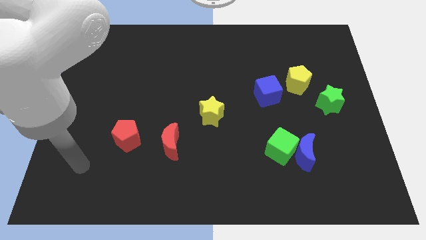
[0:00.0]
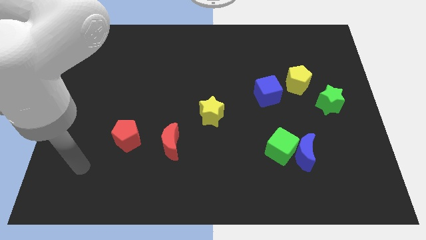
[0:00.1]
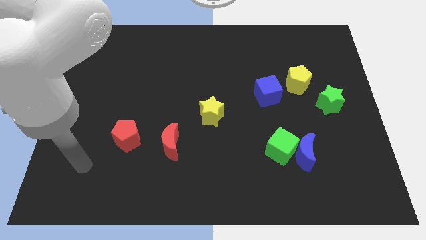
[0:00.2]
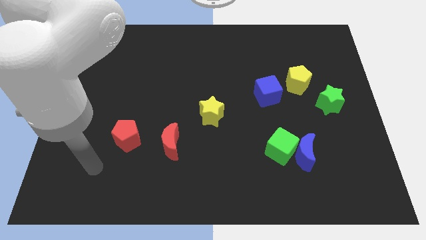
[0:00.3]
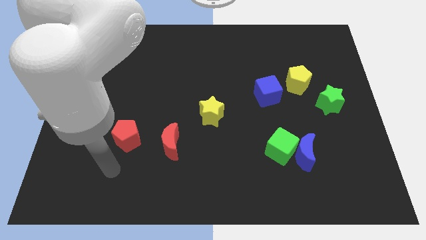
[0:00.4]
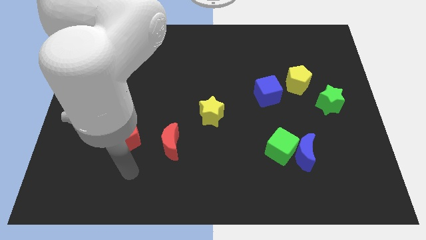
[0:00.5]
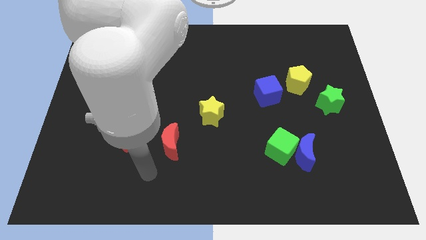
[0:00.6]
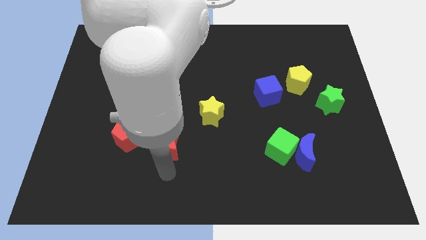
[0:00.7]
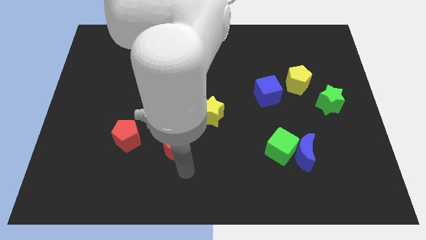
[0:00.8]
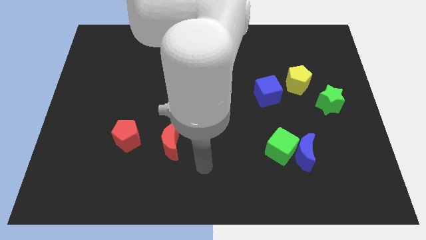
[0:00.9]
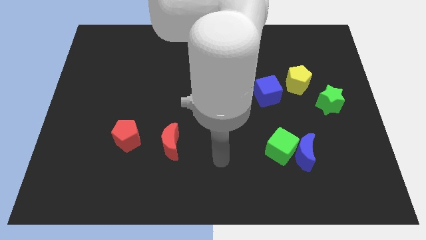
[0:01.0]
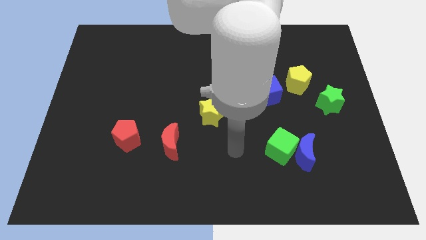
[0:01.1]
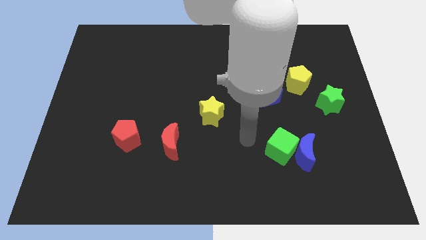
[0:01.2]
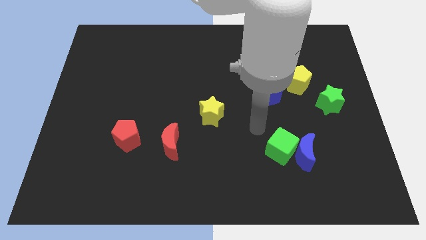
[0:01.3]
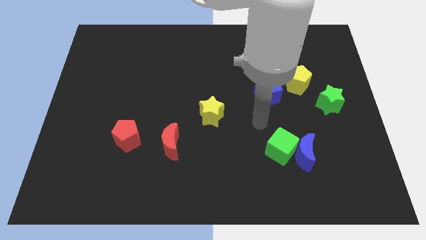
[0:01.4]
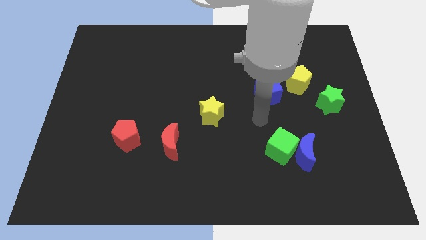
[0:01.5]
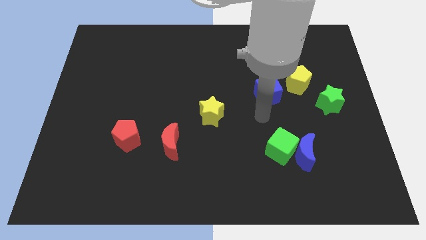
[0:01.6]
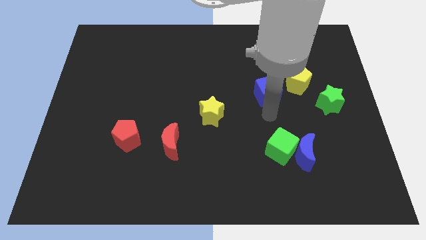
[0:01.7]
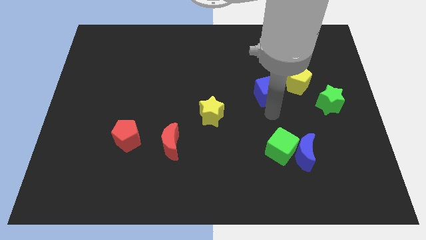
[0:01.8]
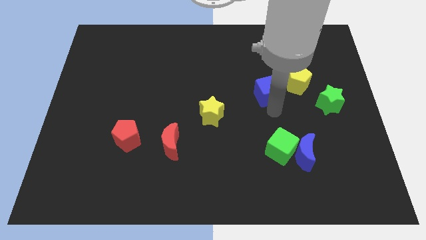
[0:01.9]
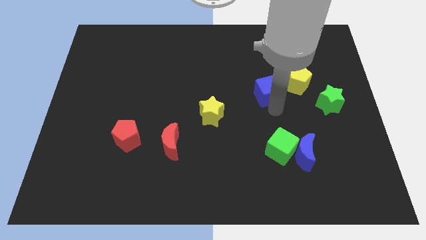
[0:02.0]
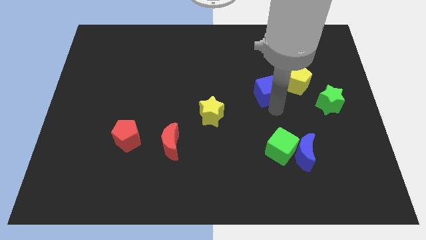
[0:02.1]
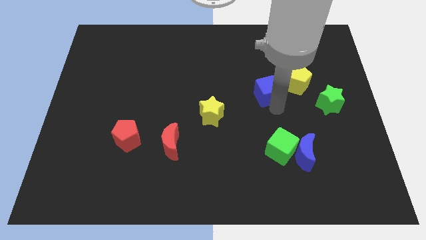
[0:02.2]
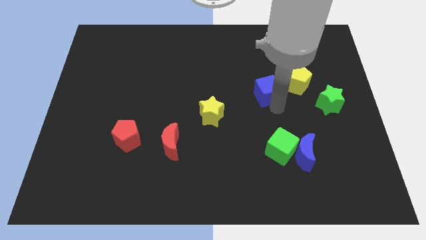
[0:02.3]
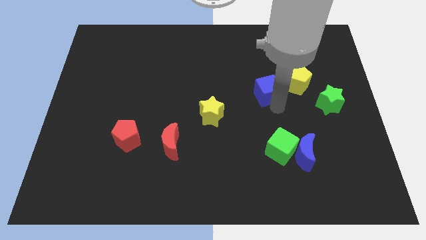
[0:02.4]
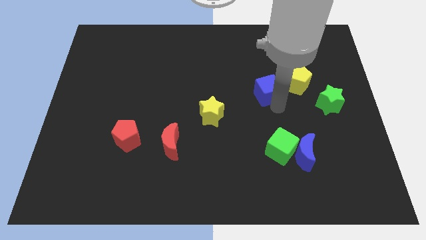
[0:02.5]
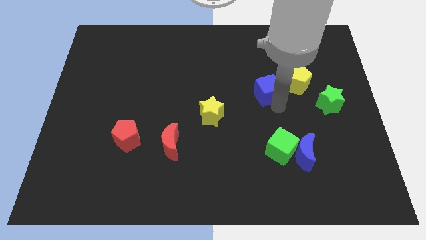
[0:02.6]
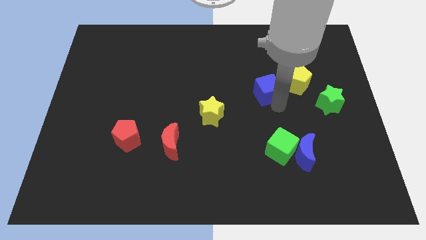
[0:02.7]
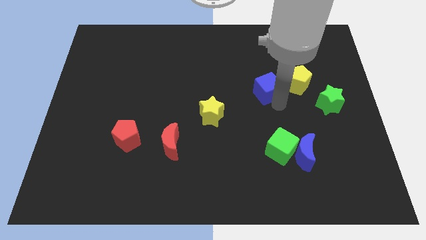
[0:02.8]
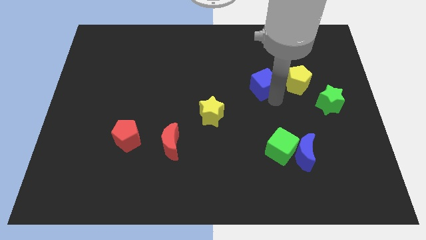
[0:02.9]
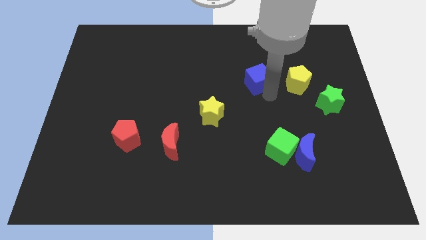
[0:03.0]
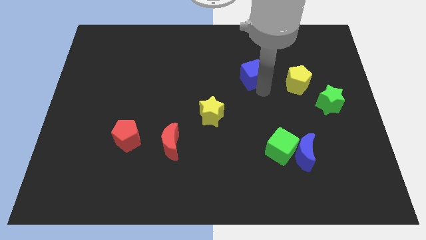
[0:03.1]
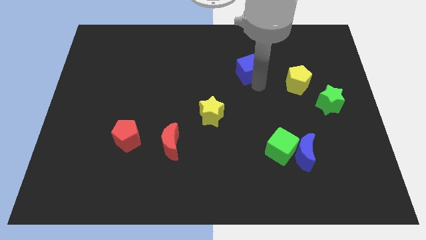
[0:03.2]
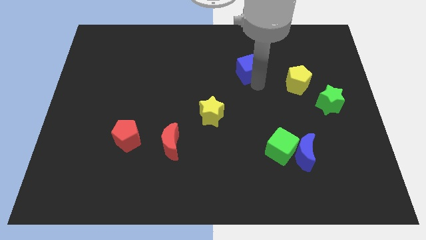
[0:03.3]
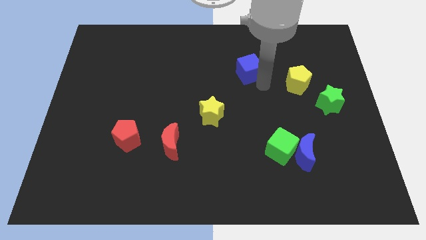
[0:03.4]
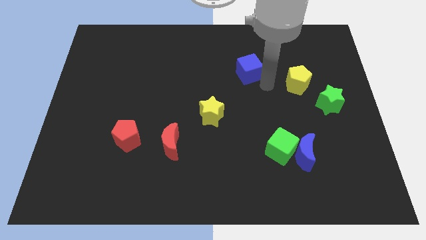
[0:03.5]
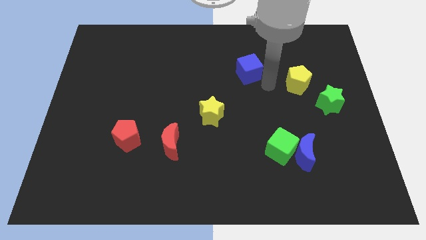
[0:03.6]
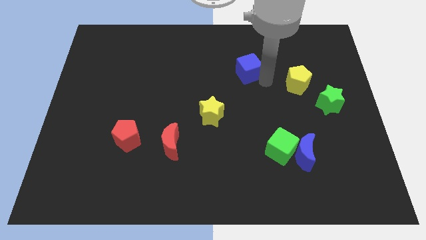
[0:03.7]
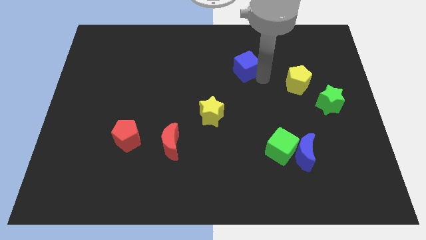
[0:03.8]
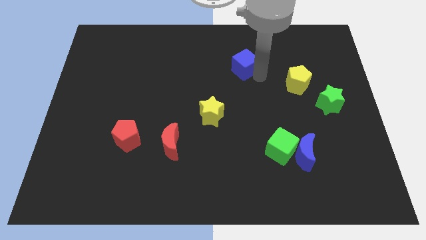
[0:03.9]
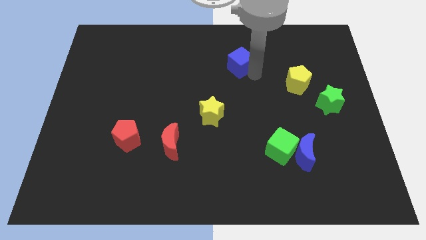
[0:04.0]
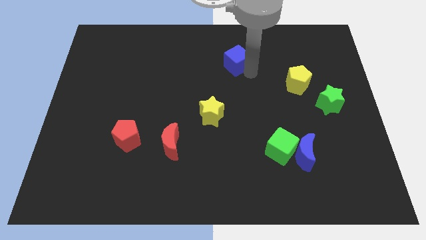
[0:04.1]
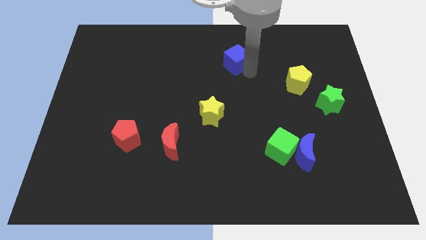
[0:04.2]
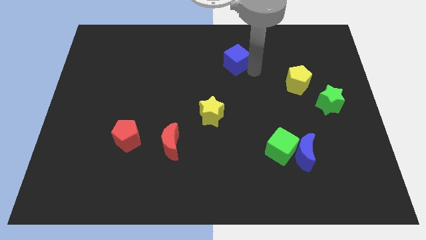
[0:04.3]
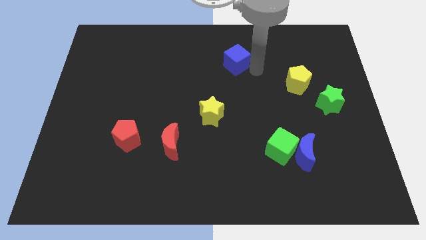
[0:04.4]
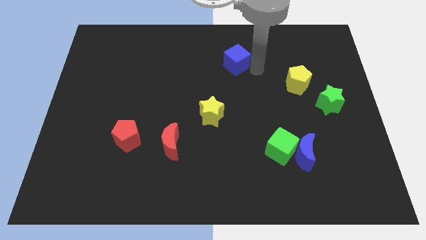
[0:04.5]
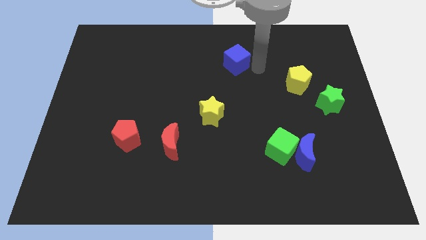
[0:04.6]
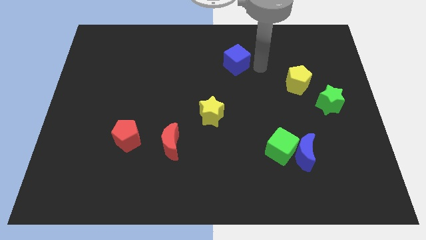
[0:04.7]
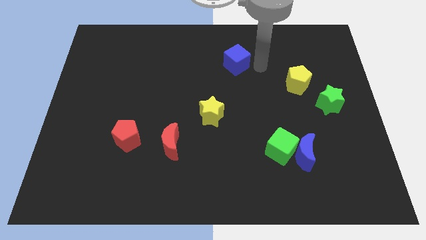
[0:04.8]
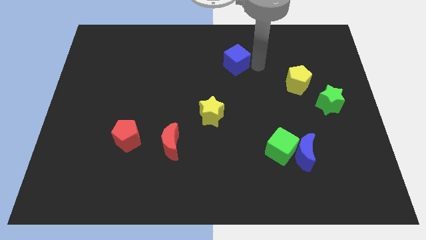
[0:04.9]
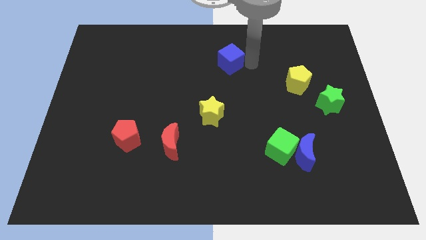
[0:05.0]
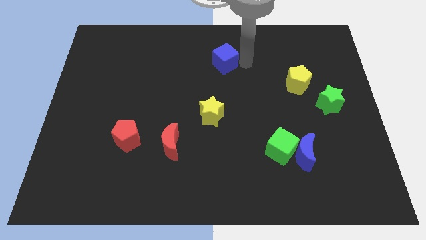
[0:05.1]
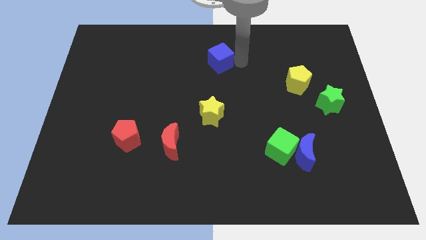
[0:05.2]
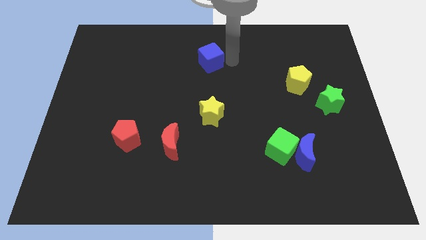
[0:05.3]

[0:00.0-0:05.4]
move the blue cube to the top center of the board

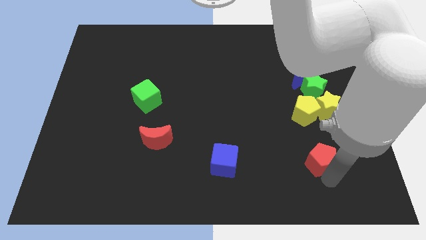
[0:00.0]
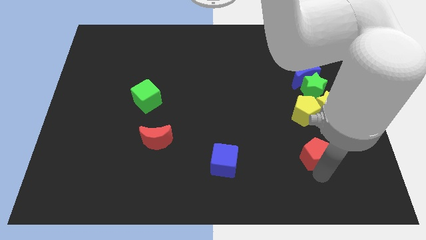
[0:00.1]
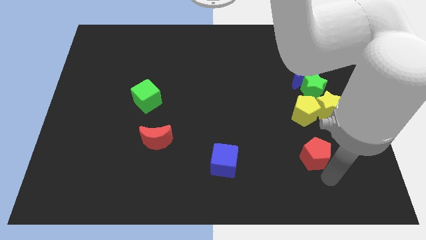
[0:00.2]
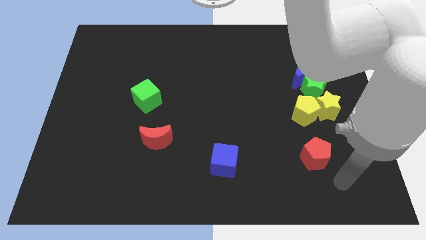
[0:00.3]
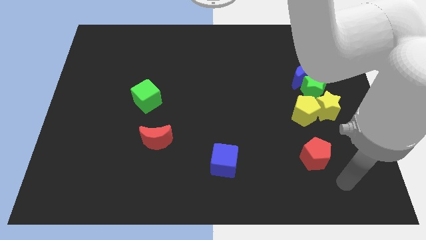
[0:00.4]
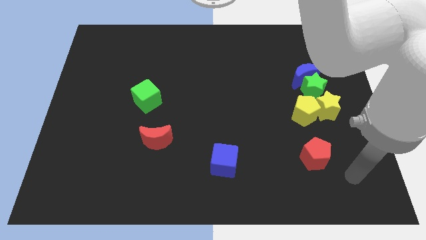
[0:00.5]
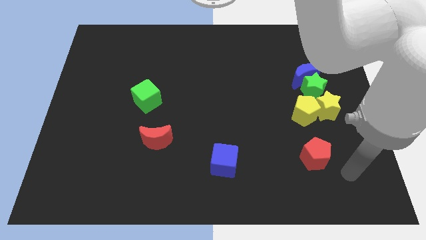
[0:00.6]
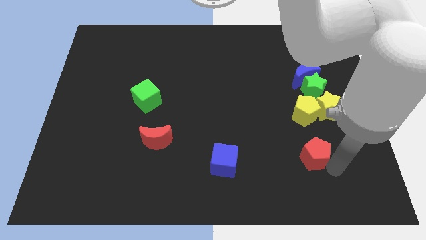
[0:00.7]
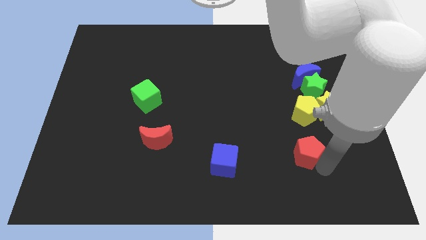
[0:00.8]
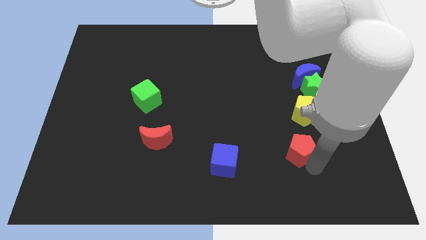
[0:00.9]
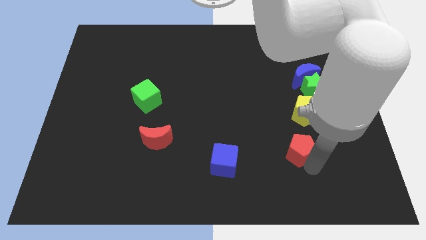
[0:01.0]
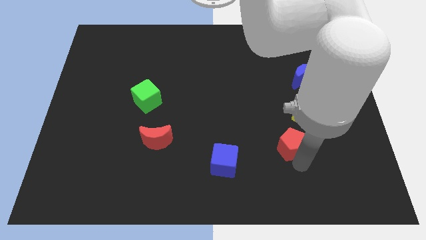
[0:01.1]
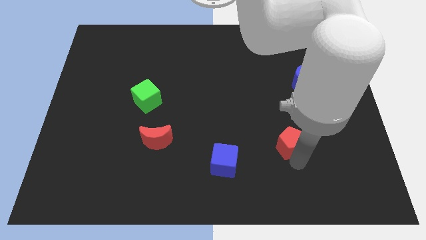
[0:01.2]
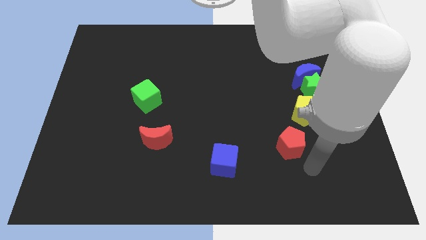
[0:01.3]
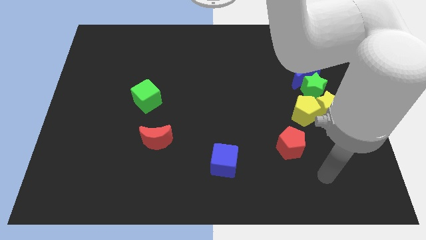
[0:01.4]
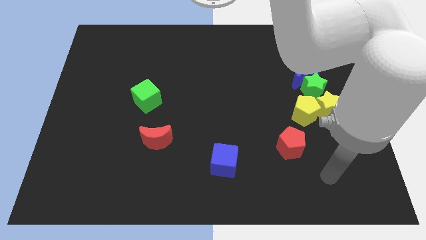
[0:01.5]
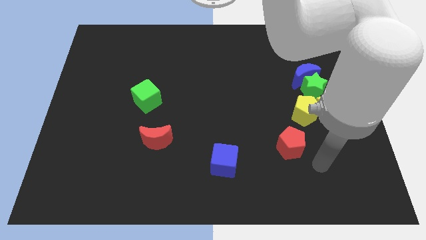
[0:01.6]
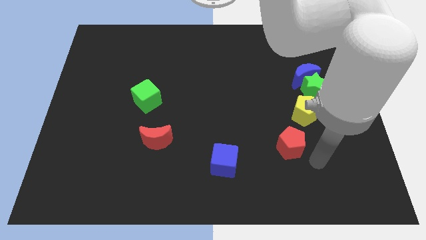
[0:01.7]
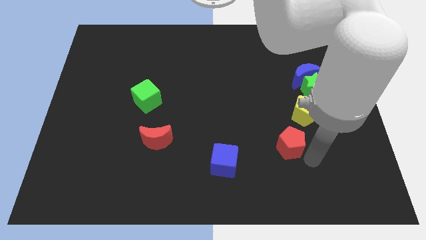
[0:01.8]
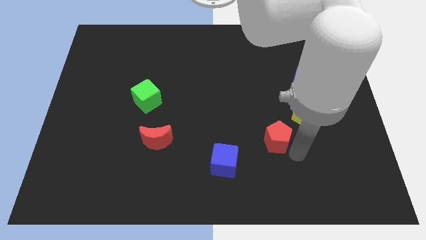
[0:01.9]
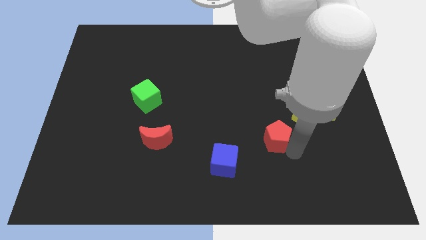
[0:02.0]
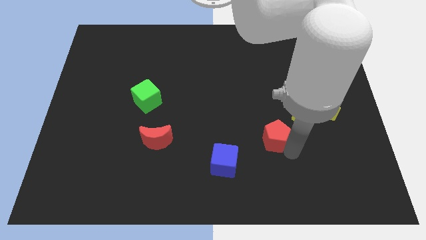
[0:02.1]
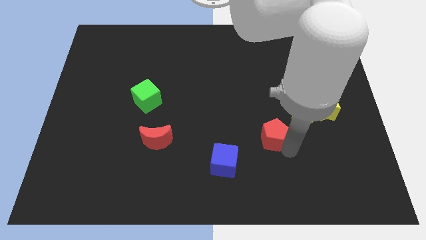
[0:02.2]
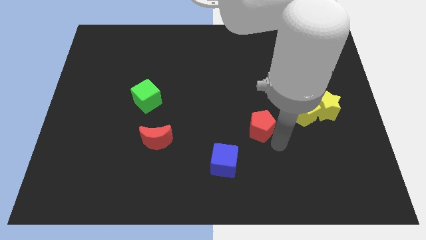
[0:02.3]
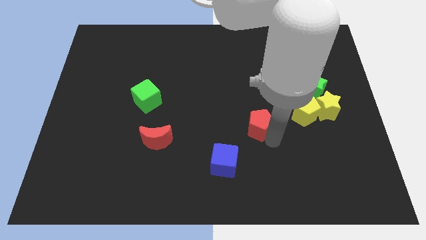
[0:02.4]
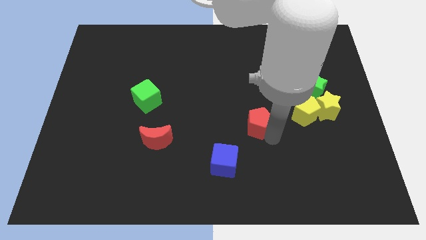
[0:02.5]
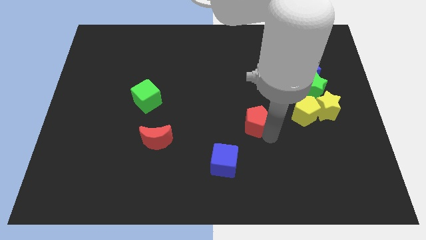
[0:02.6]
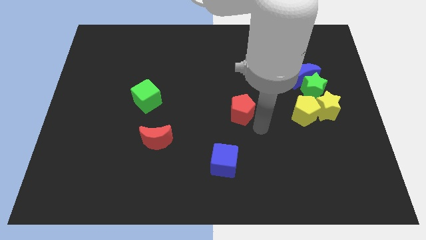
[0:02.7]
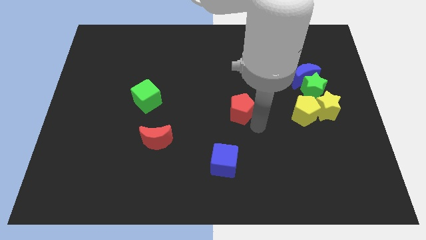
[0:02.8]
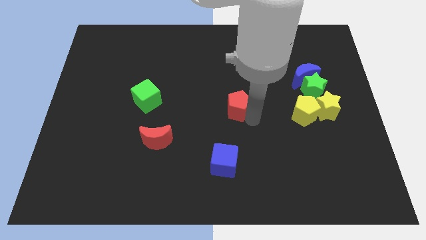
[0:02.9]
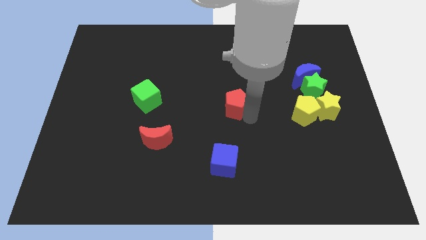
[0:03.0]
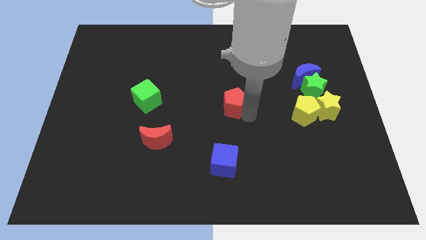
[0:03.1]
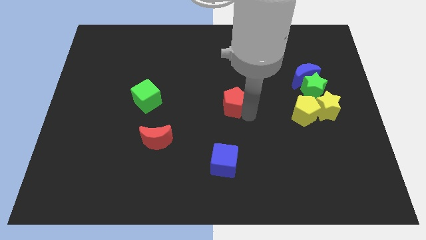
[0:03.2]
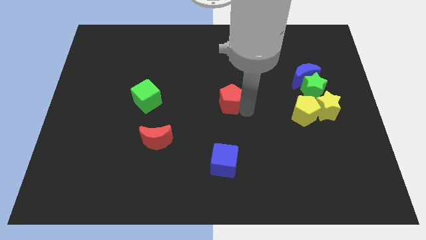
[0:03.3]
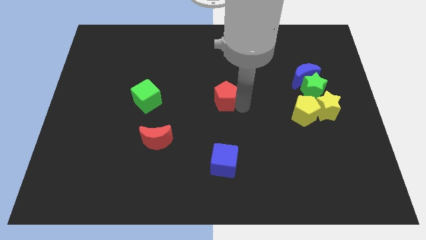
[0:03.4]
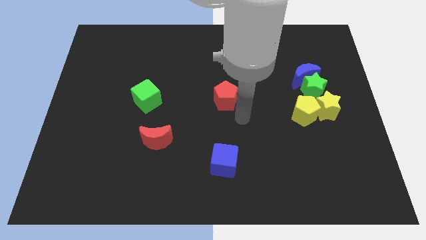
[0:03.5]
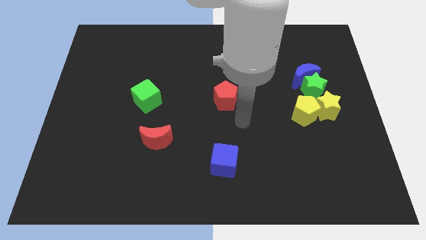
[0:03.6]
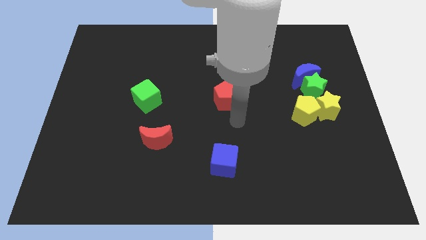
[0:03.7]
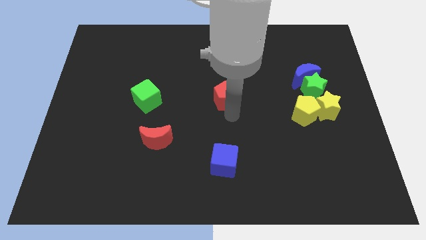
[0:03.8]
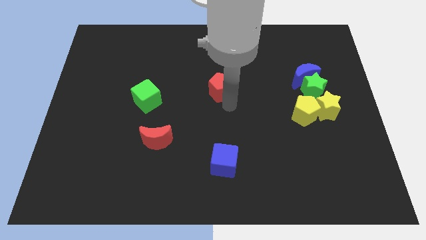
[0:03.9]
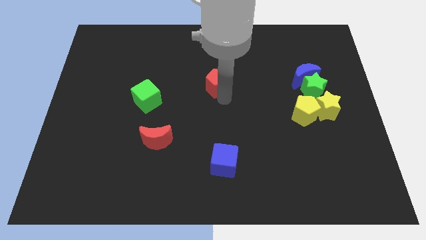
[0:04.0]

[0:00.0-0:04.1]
place yellow pentagon parallel to green cube
